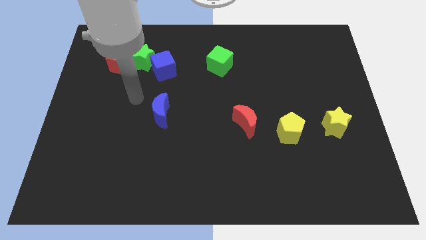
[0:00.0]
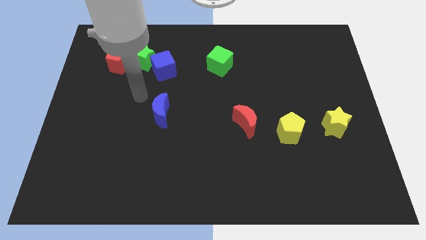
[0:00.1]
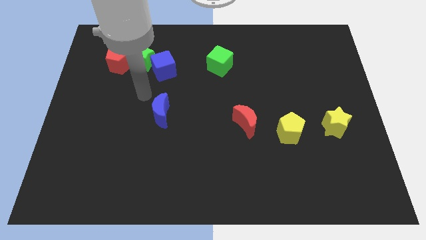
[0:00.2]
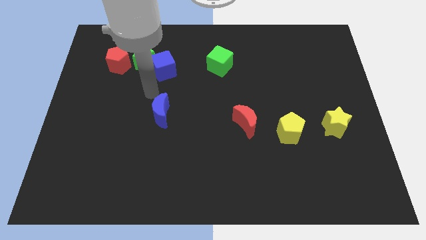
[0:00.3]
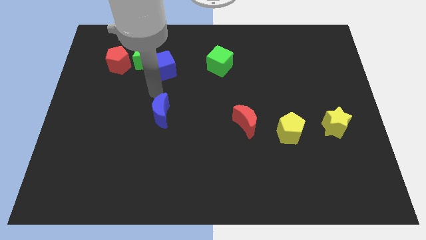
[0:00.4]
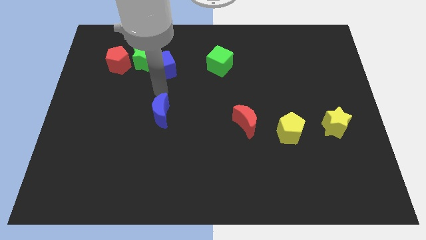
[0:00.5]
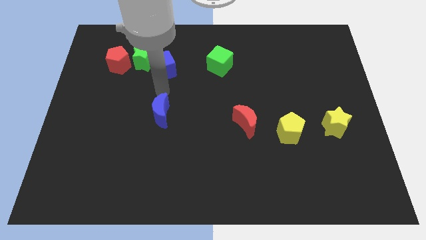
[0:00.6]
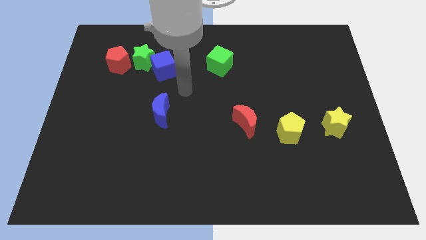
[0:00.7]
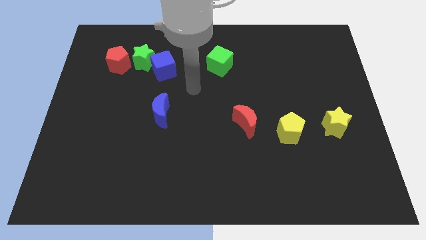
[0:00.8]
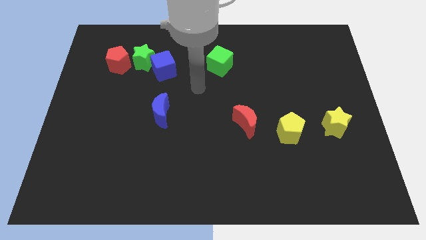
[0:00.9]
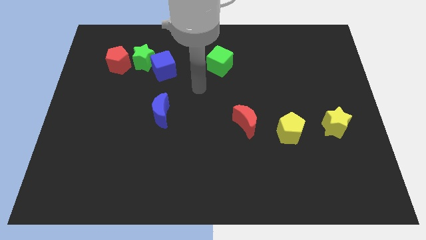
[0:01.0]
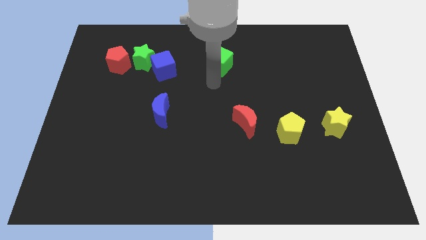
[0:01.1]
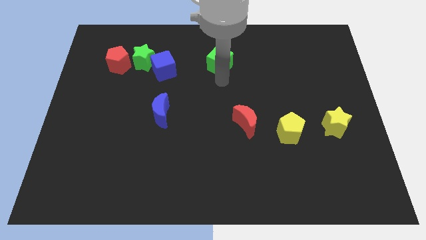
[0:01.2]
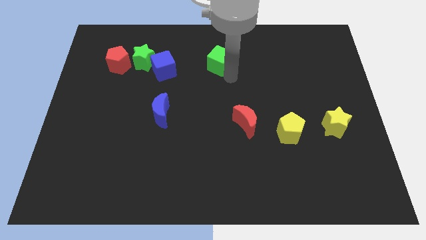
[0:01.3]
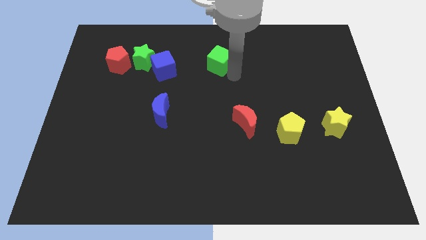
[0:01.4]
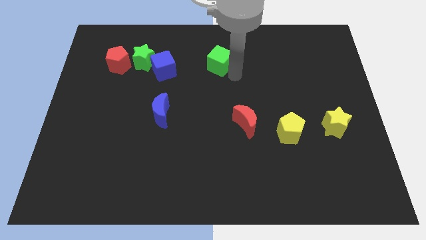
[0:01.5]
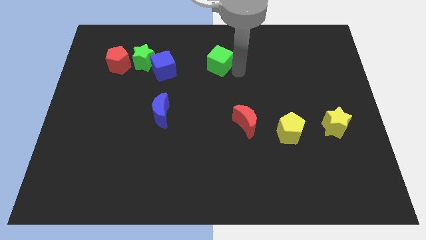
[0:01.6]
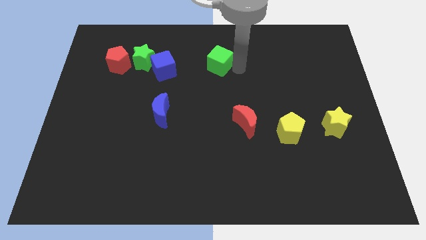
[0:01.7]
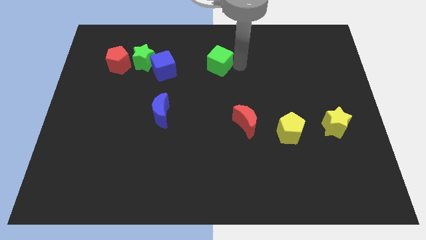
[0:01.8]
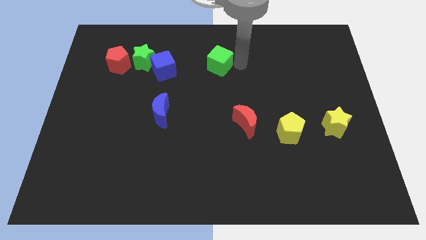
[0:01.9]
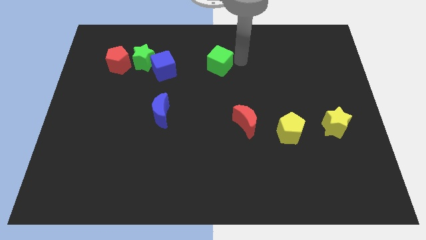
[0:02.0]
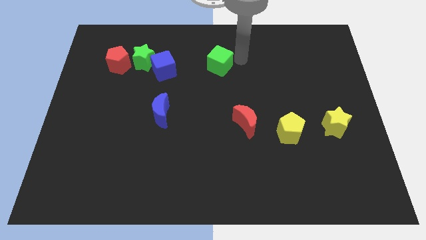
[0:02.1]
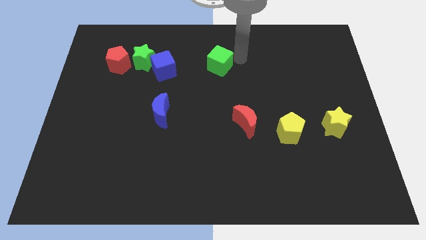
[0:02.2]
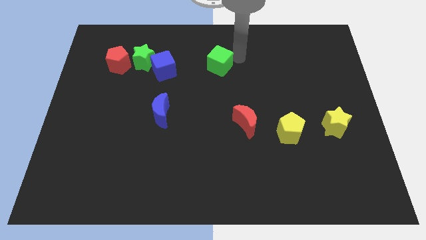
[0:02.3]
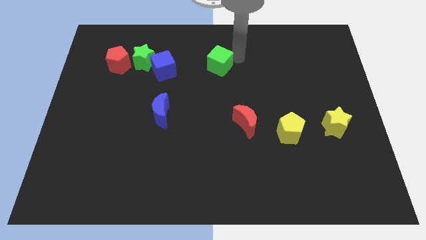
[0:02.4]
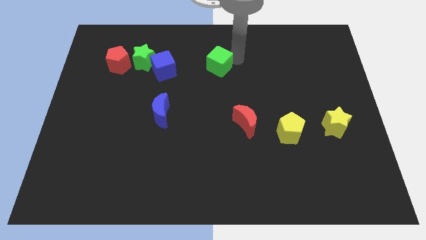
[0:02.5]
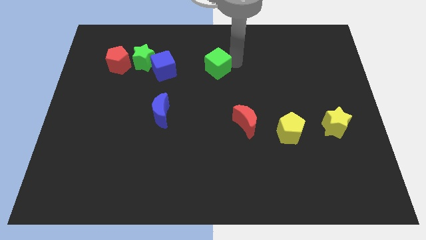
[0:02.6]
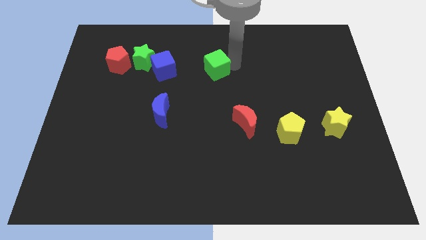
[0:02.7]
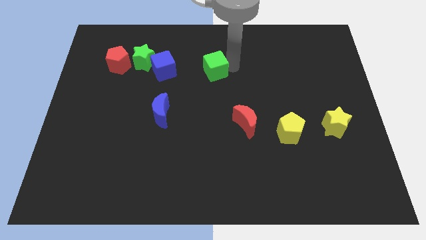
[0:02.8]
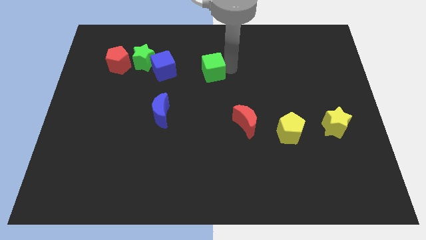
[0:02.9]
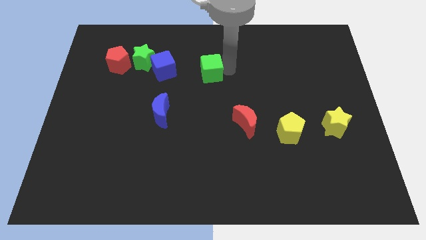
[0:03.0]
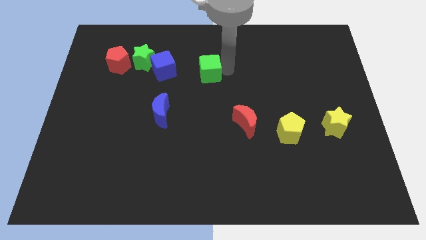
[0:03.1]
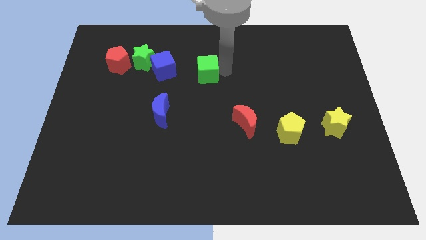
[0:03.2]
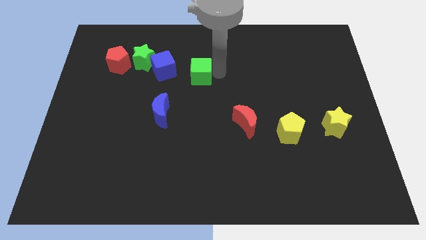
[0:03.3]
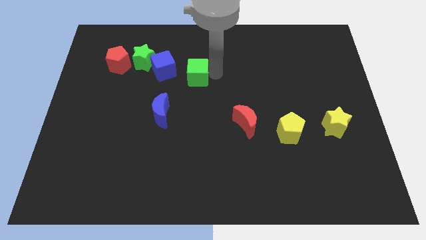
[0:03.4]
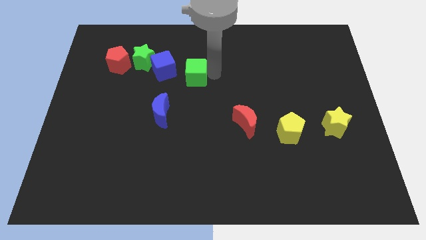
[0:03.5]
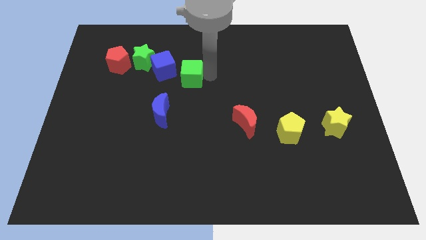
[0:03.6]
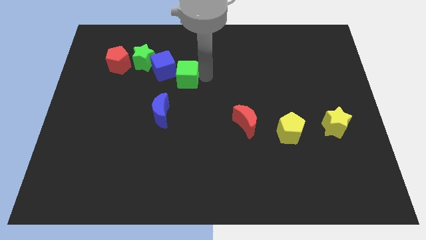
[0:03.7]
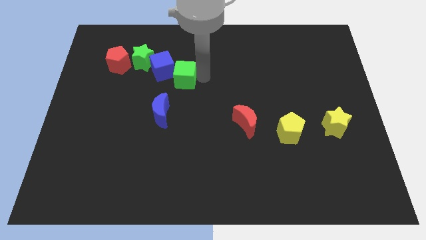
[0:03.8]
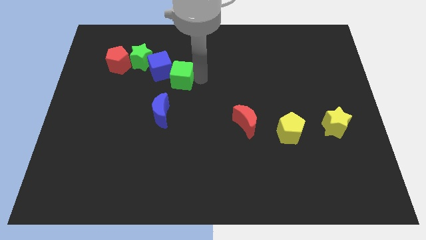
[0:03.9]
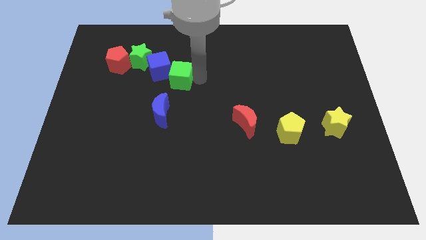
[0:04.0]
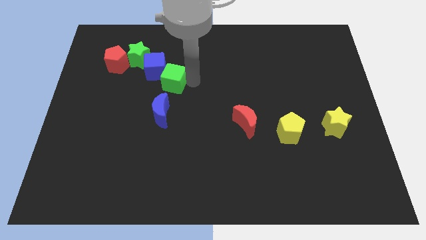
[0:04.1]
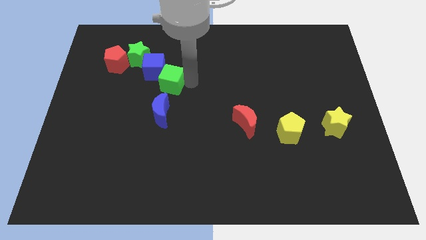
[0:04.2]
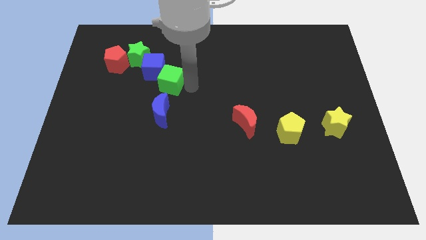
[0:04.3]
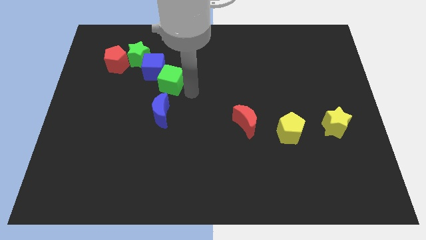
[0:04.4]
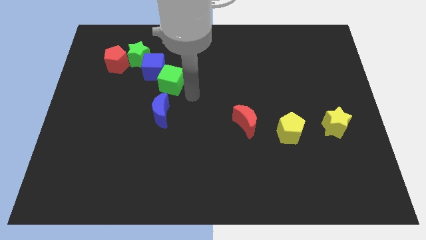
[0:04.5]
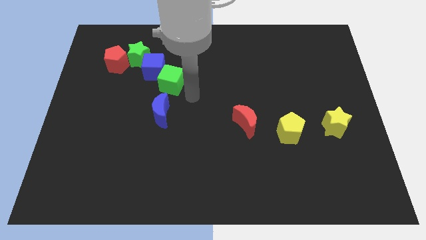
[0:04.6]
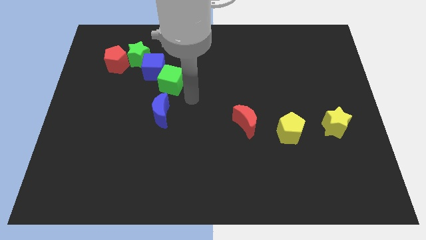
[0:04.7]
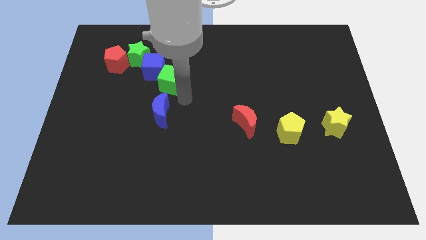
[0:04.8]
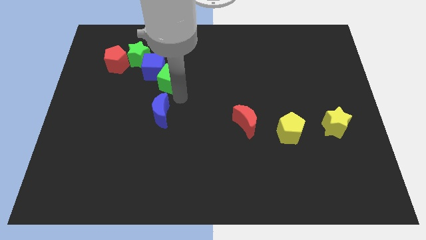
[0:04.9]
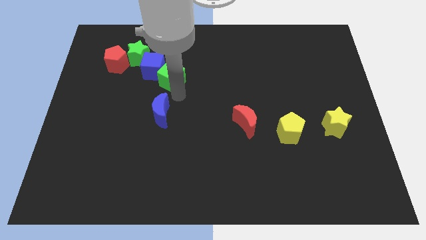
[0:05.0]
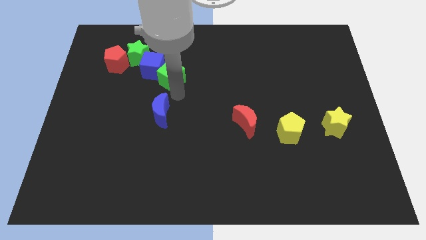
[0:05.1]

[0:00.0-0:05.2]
move the green cube close to the blue cube

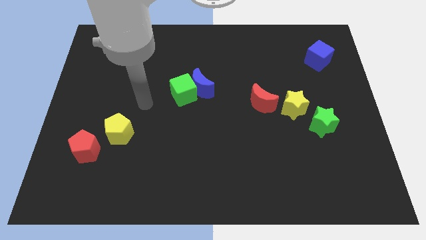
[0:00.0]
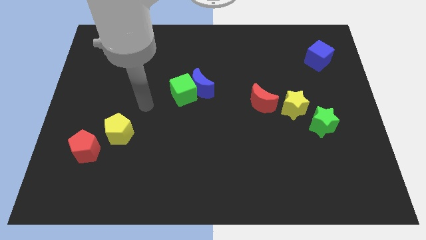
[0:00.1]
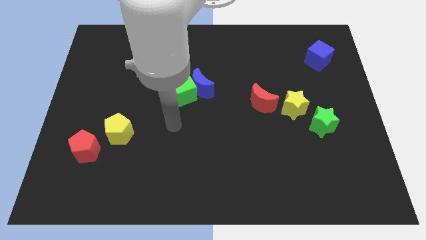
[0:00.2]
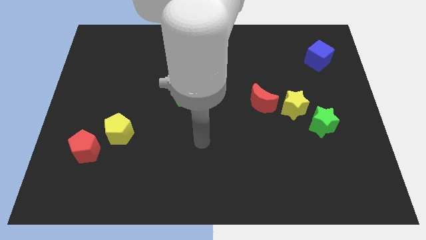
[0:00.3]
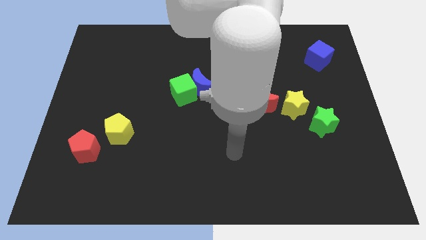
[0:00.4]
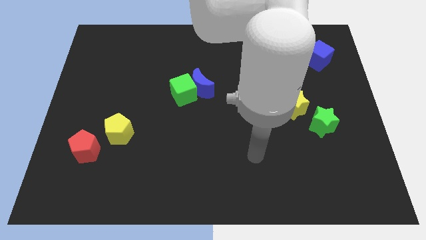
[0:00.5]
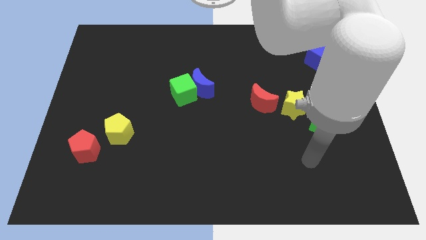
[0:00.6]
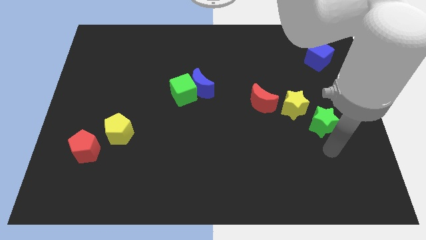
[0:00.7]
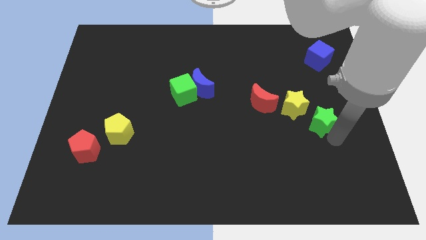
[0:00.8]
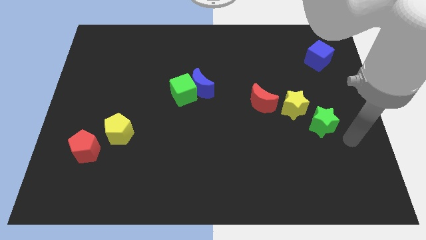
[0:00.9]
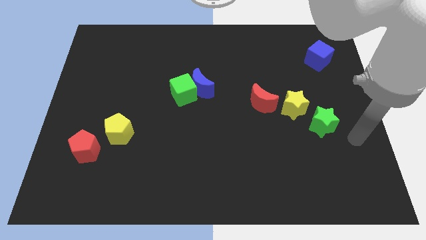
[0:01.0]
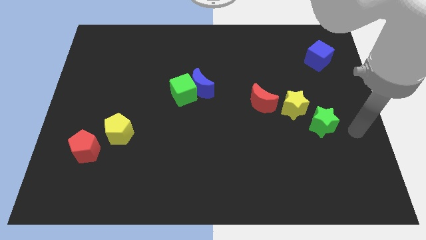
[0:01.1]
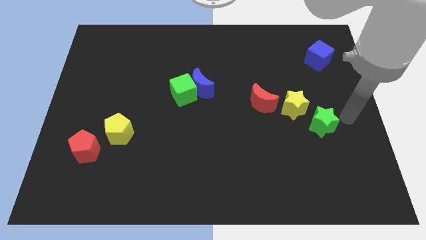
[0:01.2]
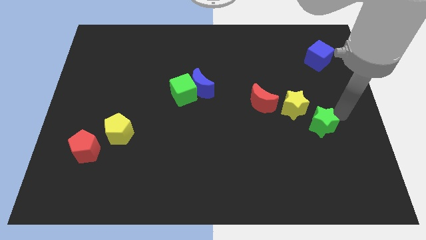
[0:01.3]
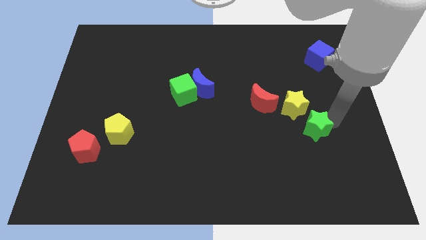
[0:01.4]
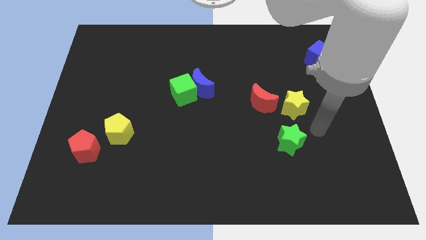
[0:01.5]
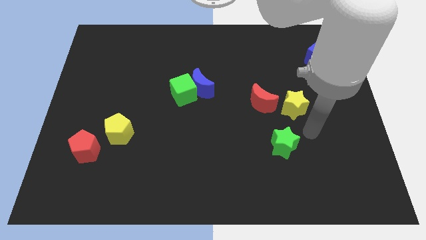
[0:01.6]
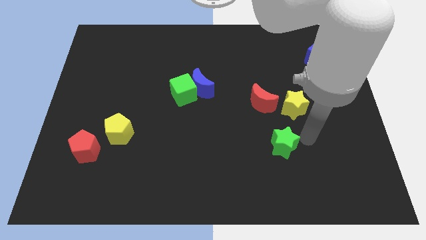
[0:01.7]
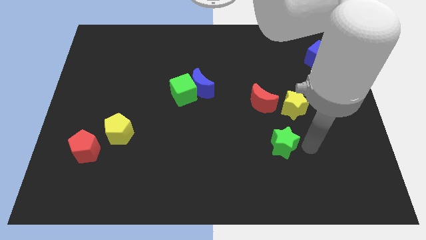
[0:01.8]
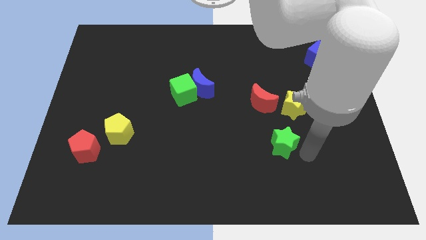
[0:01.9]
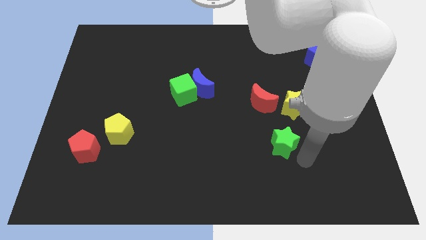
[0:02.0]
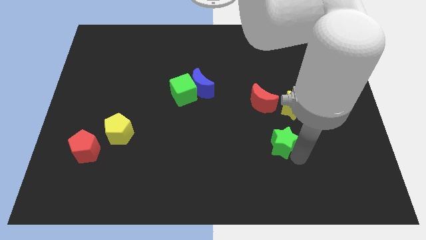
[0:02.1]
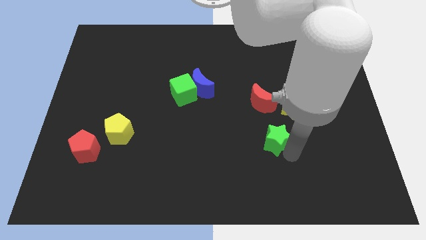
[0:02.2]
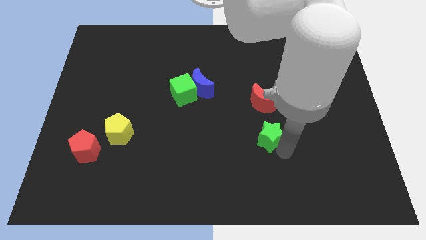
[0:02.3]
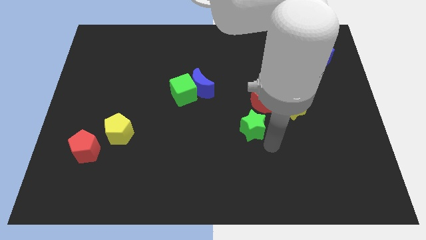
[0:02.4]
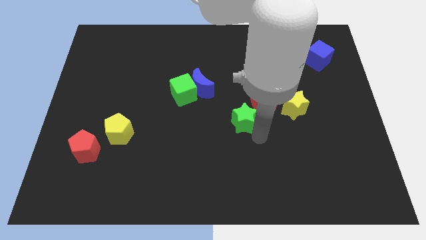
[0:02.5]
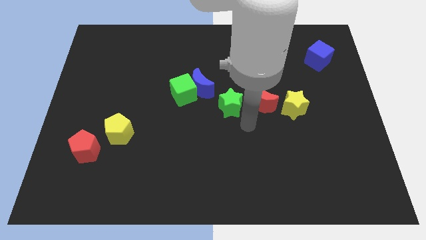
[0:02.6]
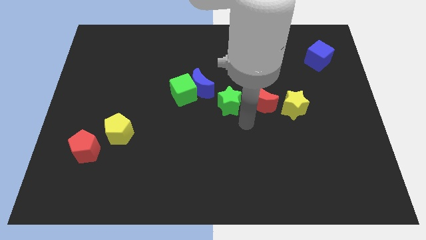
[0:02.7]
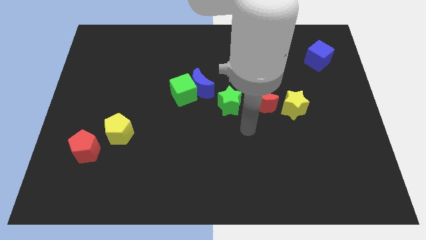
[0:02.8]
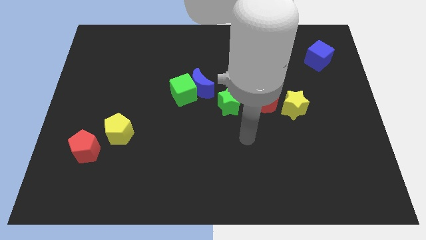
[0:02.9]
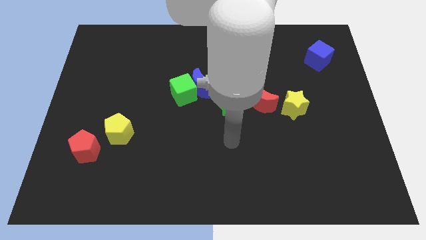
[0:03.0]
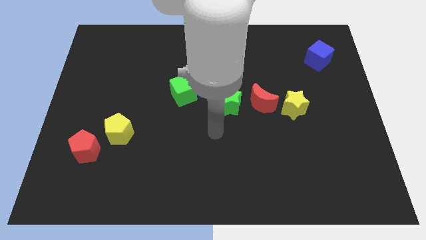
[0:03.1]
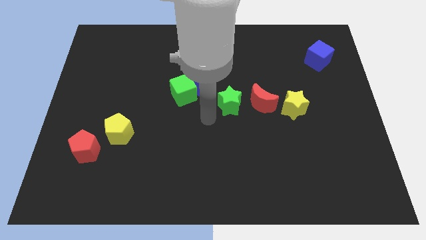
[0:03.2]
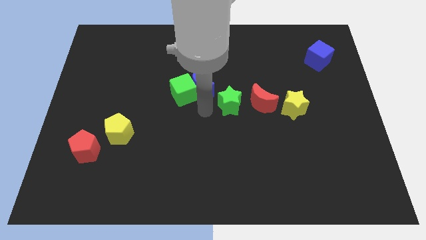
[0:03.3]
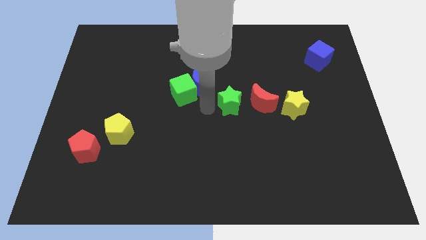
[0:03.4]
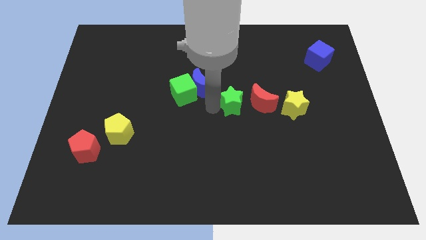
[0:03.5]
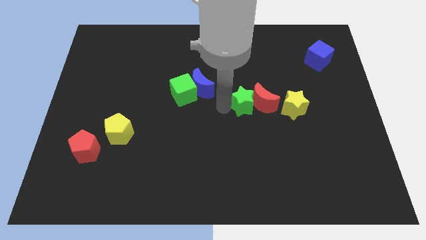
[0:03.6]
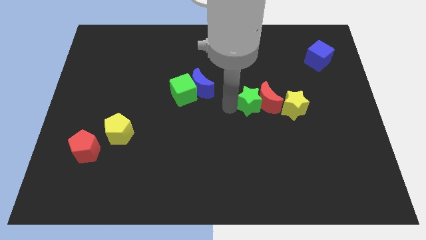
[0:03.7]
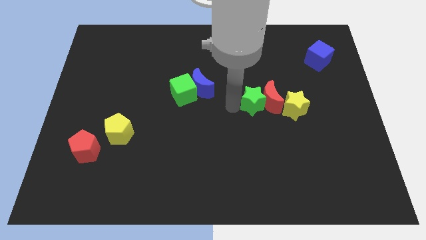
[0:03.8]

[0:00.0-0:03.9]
slide the green star to the red moon
